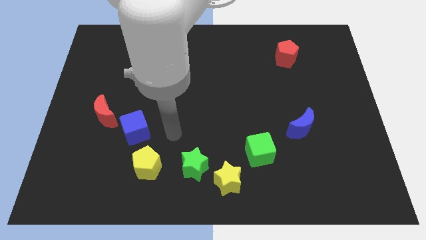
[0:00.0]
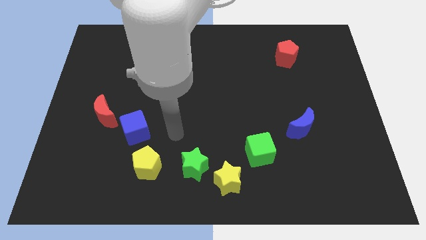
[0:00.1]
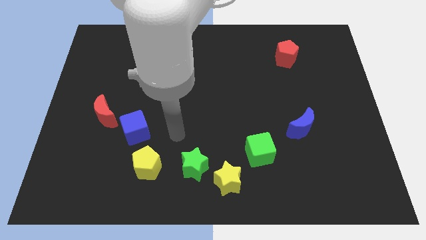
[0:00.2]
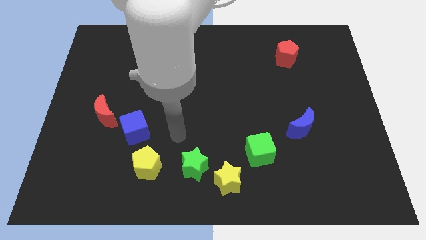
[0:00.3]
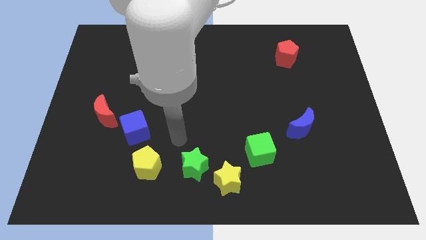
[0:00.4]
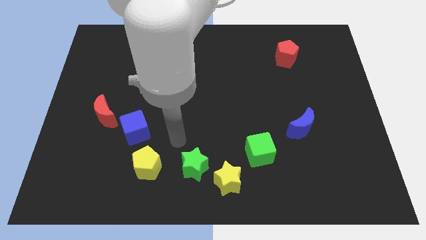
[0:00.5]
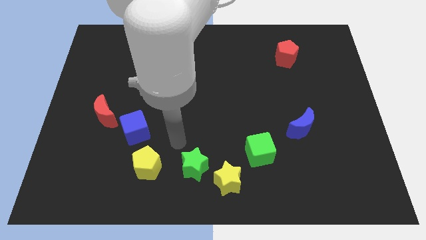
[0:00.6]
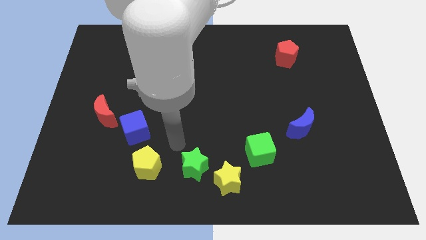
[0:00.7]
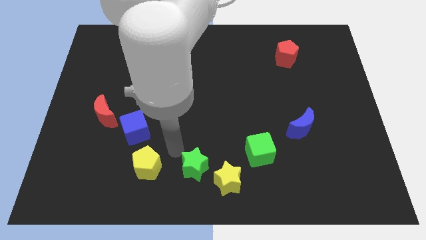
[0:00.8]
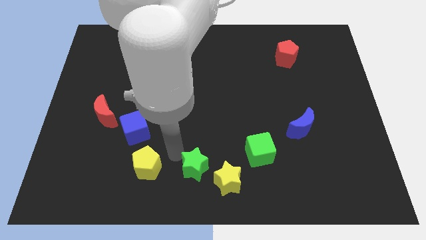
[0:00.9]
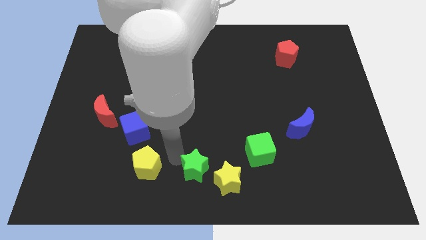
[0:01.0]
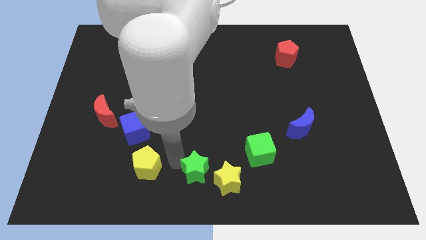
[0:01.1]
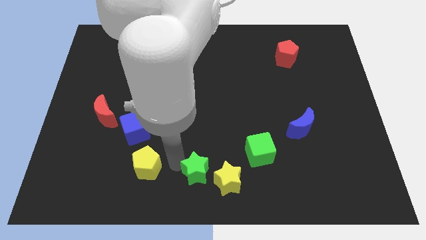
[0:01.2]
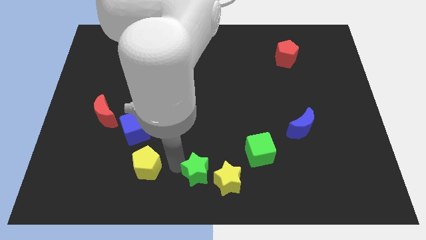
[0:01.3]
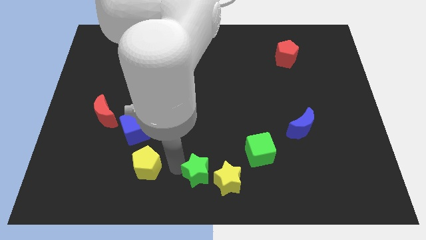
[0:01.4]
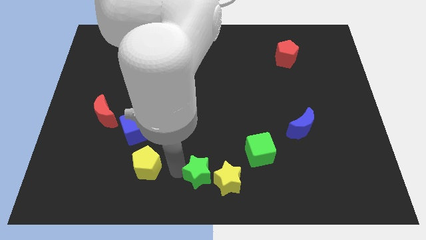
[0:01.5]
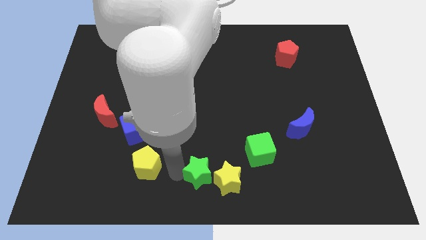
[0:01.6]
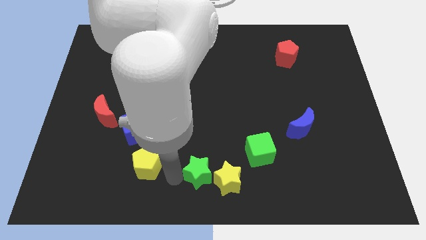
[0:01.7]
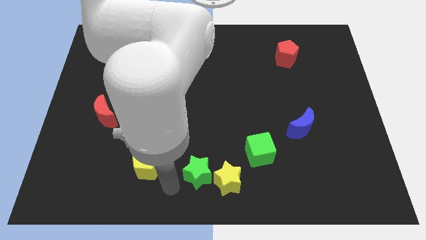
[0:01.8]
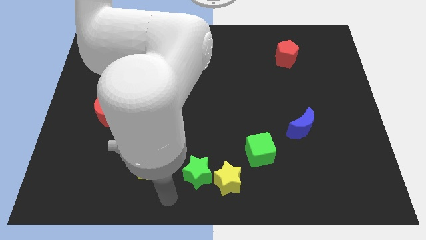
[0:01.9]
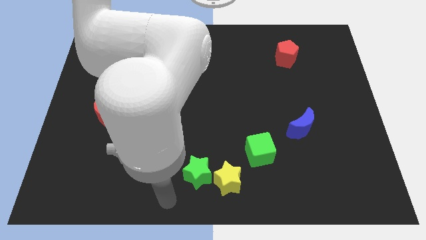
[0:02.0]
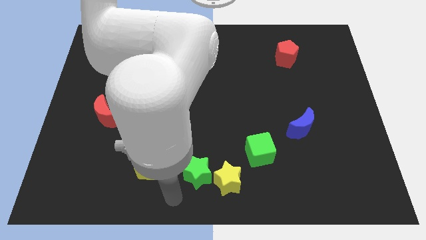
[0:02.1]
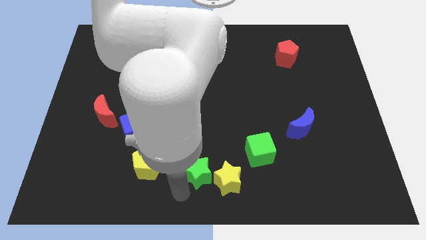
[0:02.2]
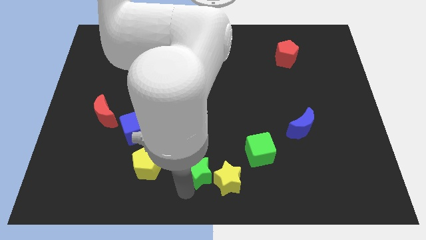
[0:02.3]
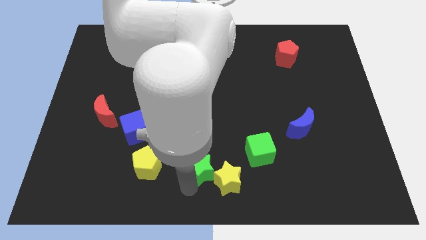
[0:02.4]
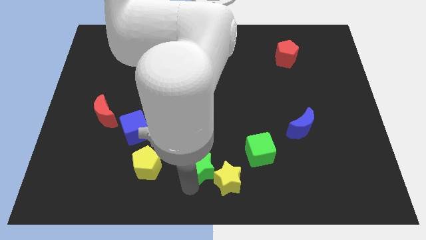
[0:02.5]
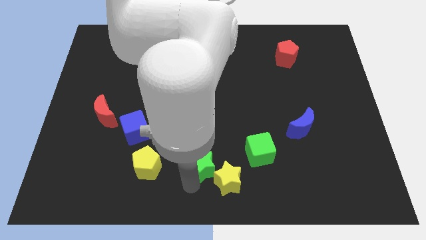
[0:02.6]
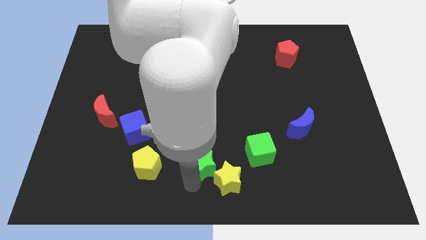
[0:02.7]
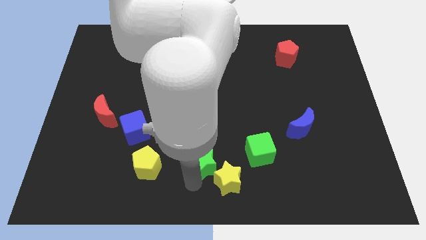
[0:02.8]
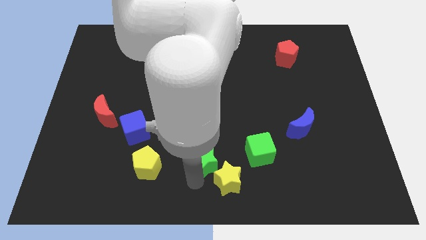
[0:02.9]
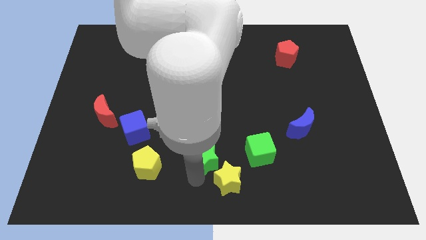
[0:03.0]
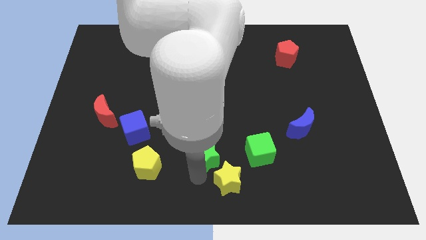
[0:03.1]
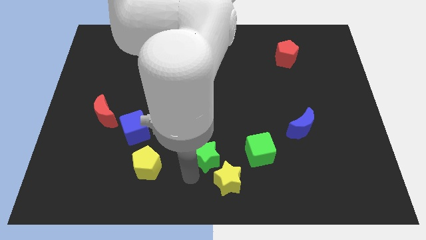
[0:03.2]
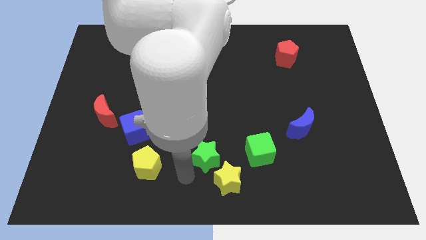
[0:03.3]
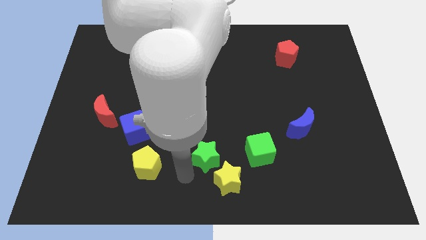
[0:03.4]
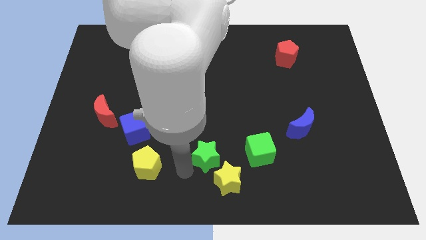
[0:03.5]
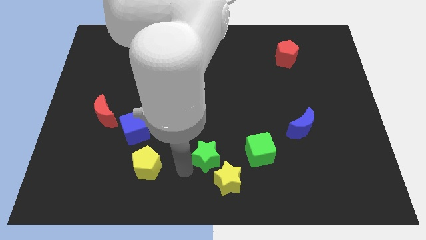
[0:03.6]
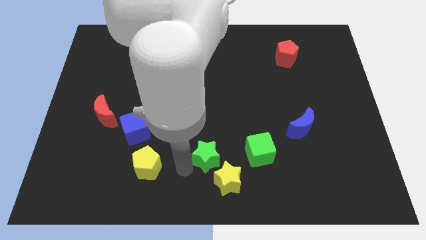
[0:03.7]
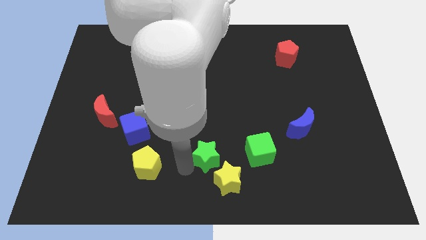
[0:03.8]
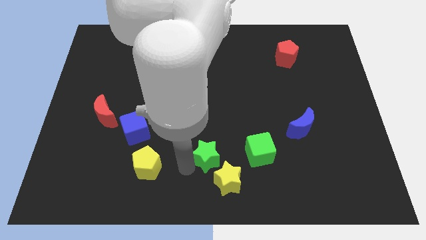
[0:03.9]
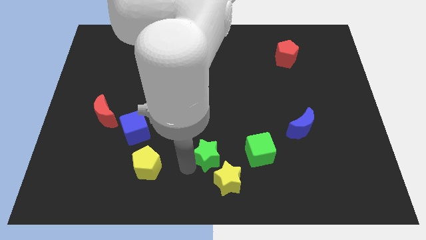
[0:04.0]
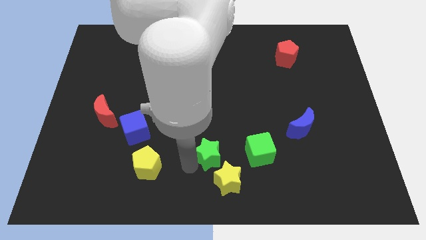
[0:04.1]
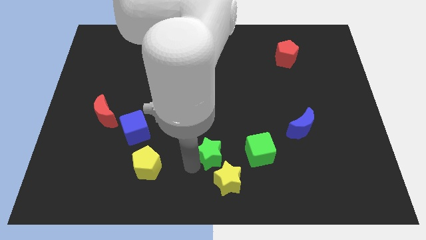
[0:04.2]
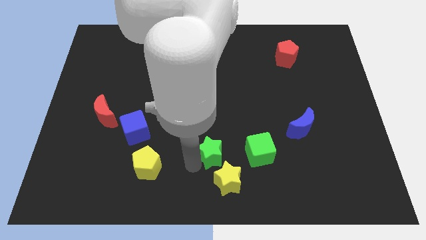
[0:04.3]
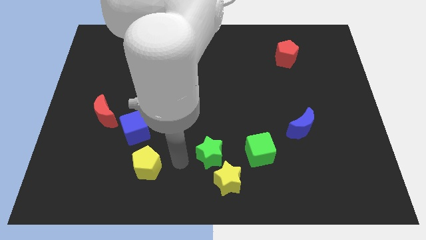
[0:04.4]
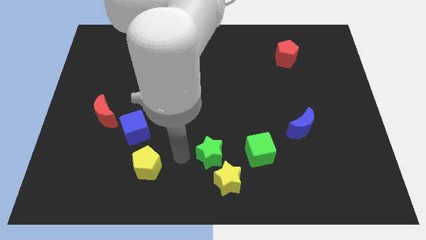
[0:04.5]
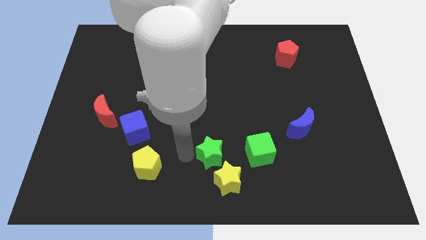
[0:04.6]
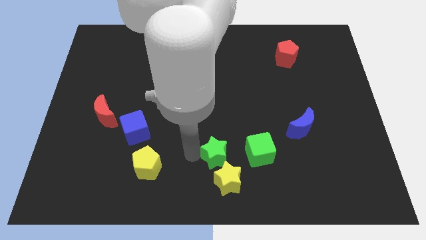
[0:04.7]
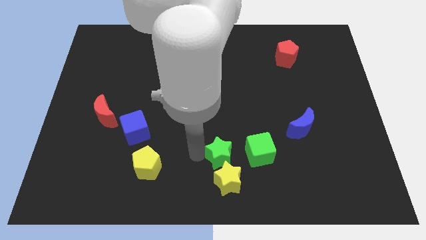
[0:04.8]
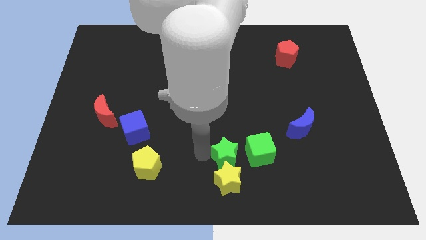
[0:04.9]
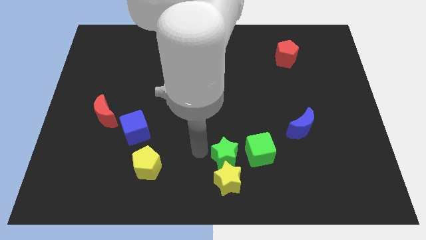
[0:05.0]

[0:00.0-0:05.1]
place the green star at the top side of the yellow star

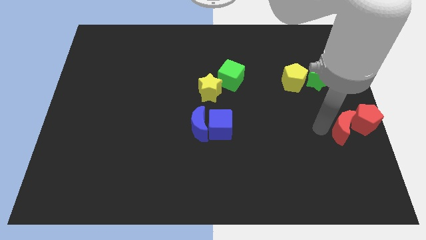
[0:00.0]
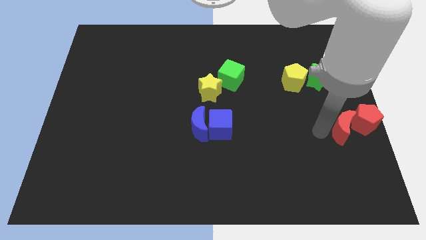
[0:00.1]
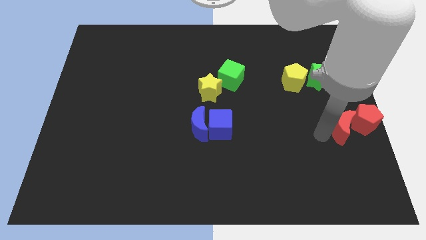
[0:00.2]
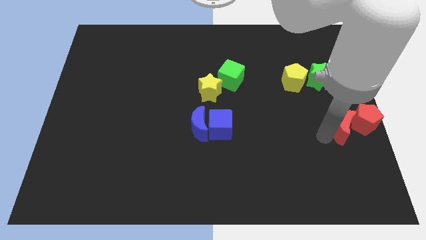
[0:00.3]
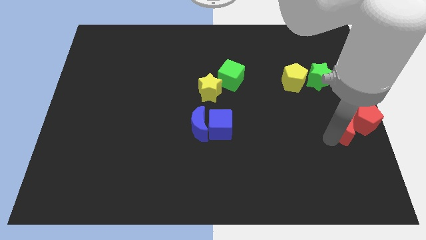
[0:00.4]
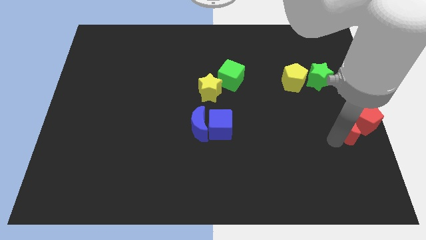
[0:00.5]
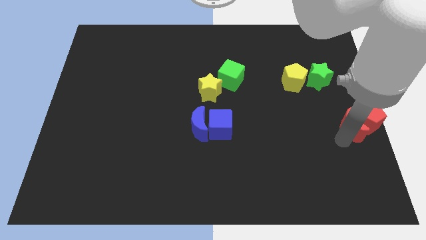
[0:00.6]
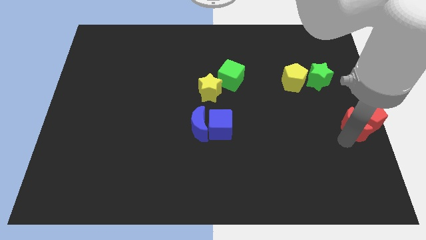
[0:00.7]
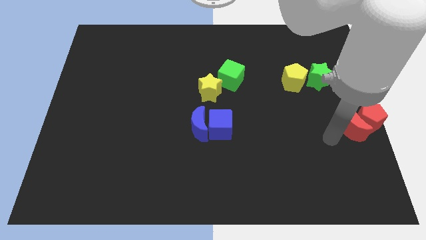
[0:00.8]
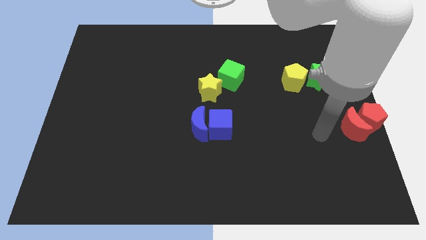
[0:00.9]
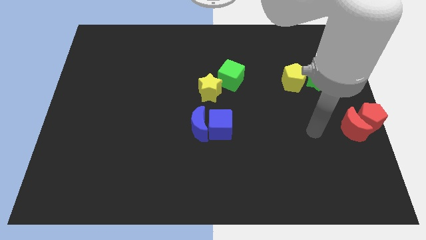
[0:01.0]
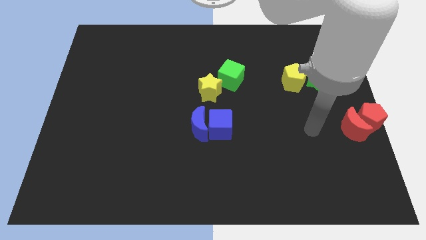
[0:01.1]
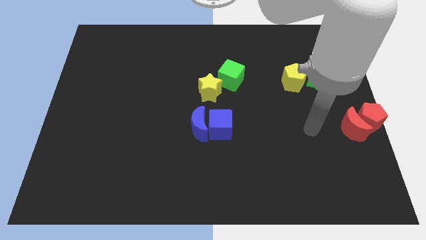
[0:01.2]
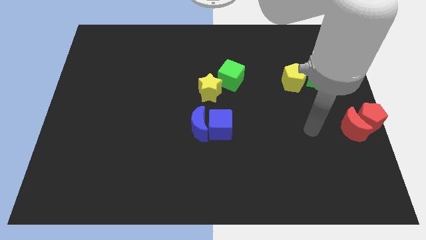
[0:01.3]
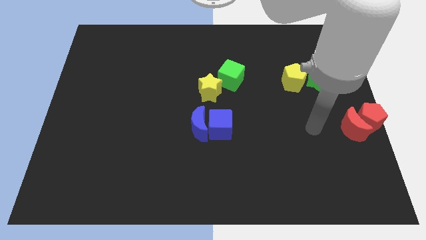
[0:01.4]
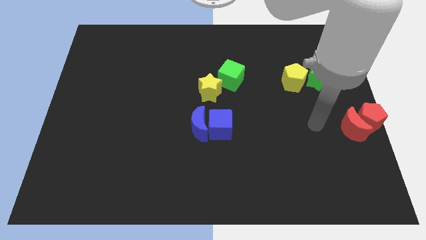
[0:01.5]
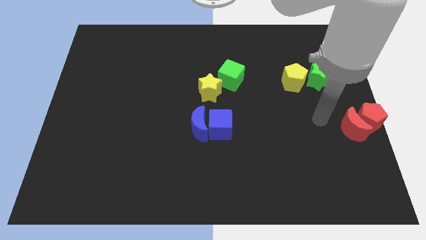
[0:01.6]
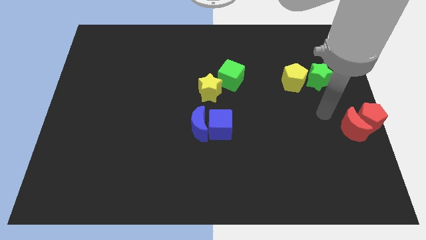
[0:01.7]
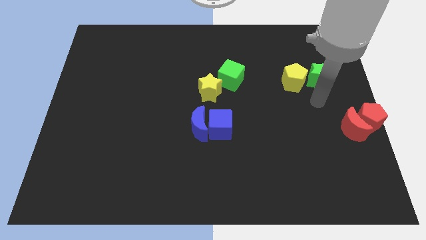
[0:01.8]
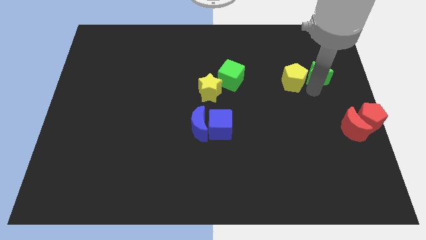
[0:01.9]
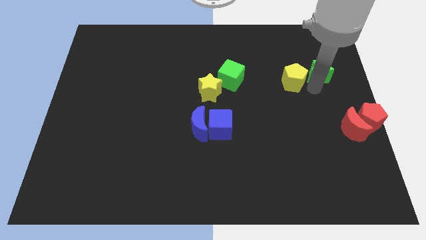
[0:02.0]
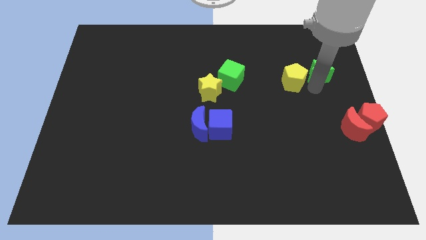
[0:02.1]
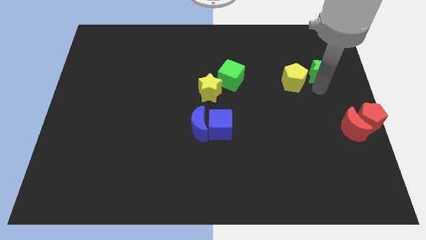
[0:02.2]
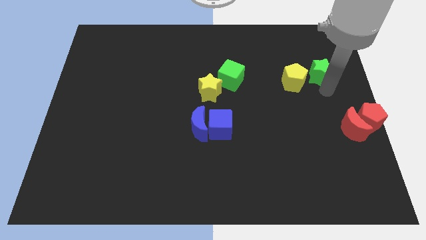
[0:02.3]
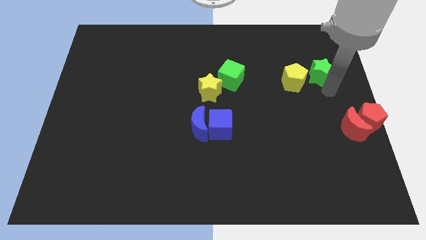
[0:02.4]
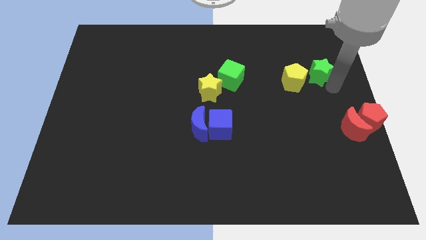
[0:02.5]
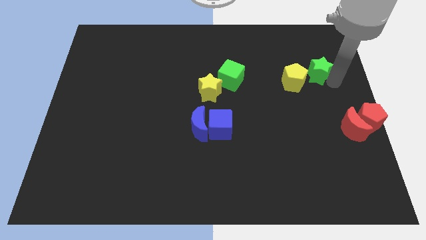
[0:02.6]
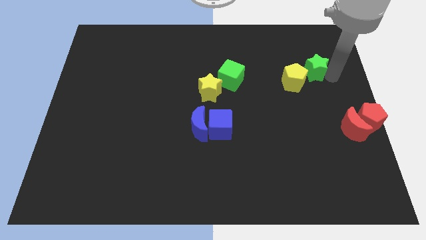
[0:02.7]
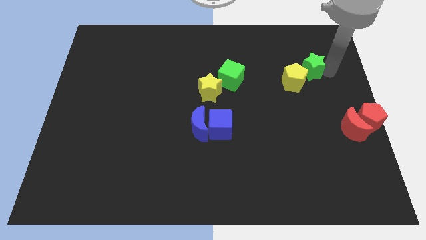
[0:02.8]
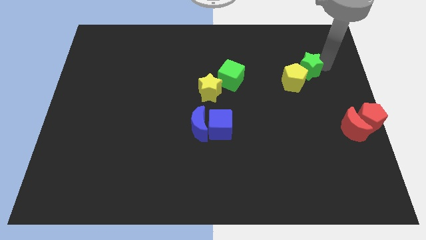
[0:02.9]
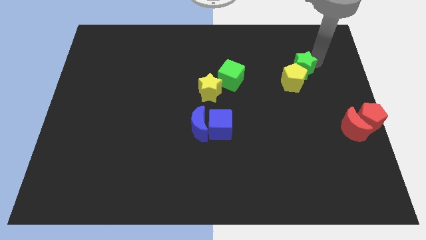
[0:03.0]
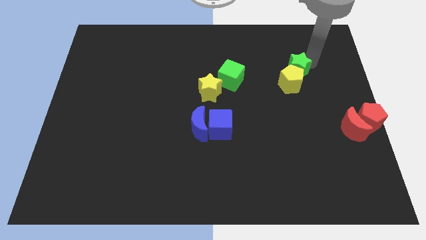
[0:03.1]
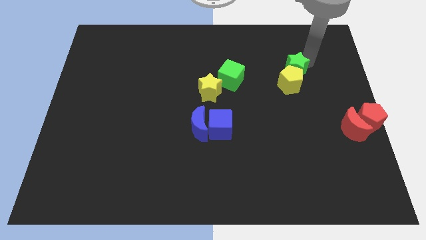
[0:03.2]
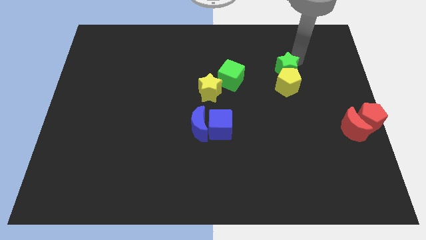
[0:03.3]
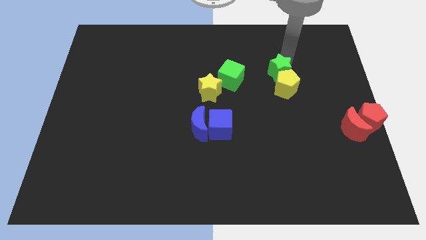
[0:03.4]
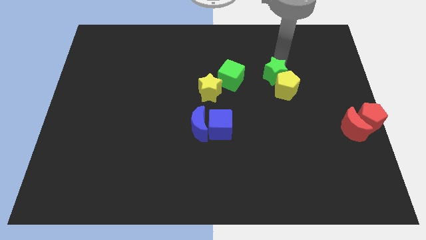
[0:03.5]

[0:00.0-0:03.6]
push the green star into the top of the yellow pentagon

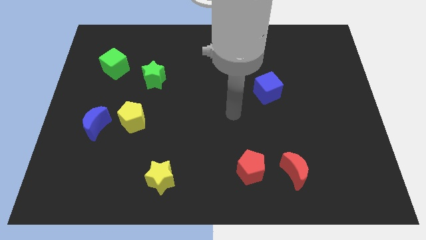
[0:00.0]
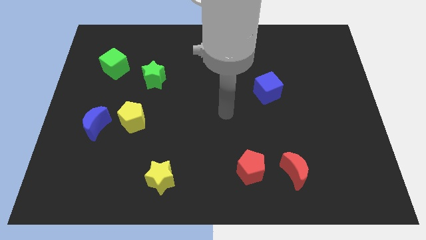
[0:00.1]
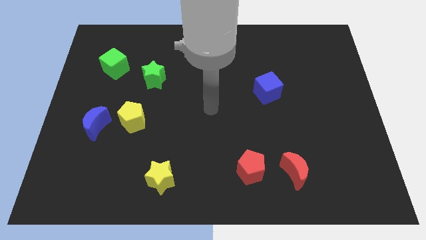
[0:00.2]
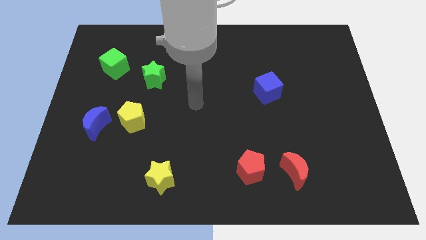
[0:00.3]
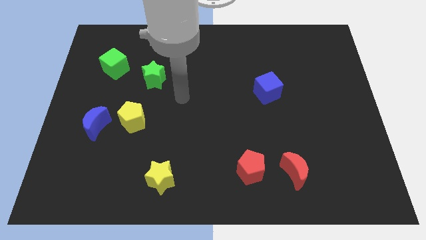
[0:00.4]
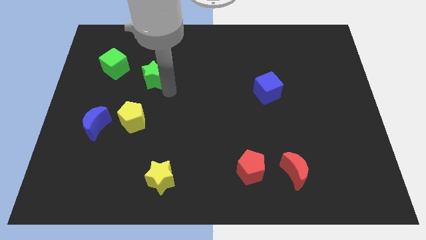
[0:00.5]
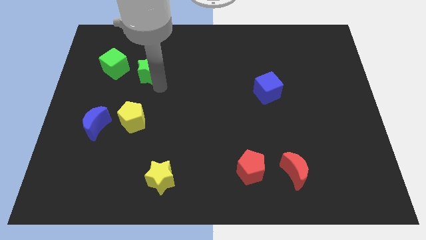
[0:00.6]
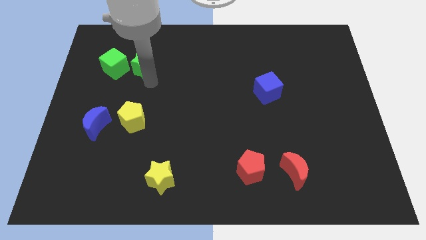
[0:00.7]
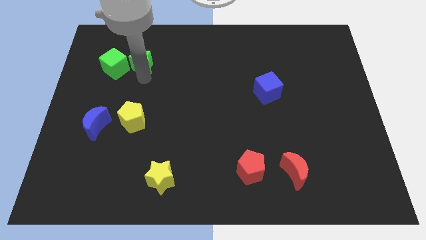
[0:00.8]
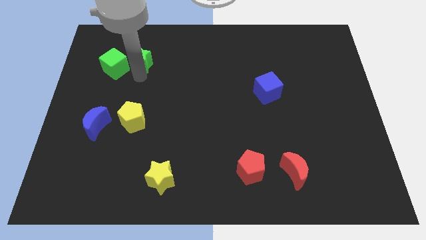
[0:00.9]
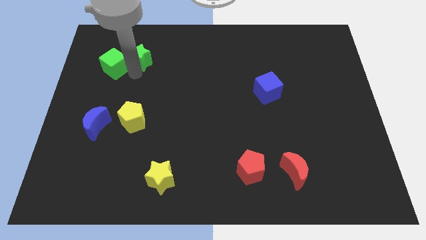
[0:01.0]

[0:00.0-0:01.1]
touch the bottom of green star
